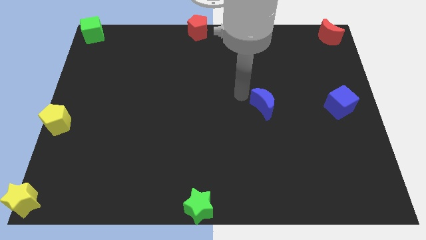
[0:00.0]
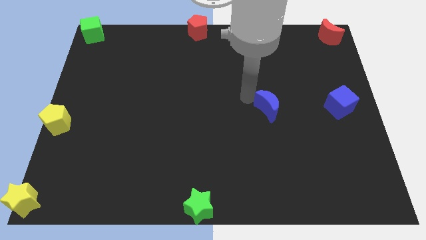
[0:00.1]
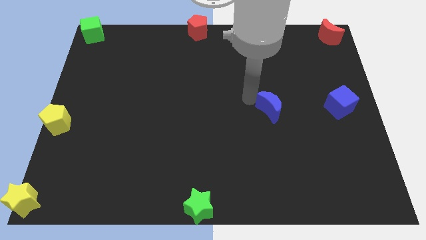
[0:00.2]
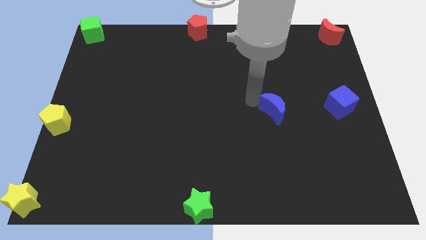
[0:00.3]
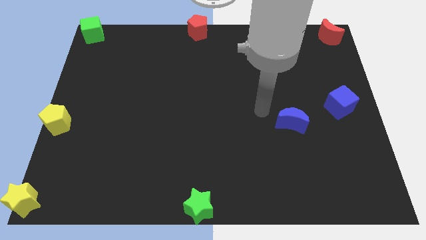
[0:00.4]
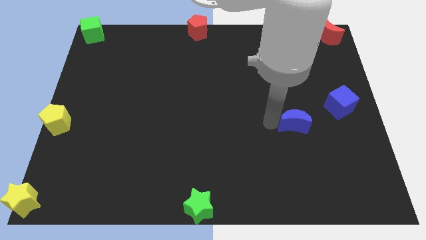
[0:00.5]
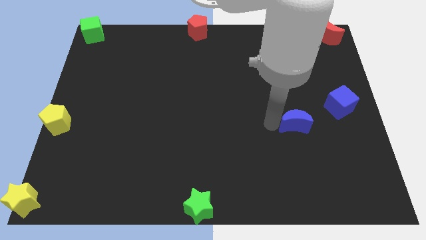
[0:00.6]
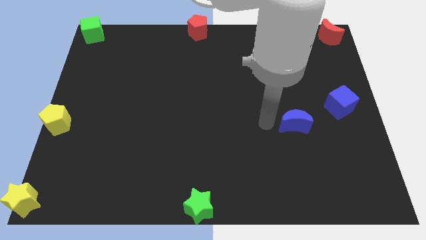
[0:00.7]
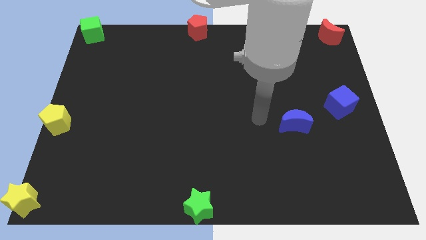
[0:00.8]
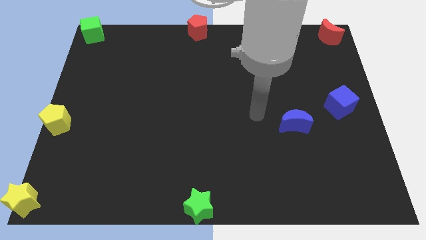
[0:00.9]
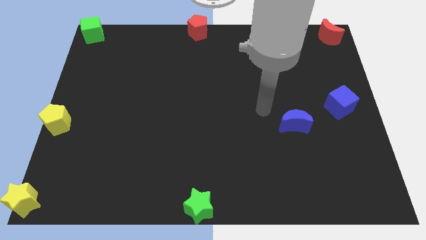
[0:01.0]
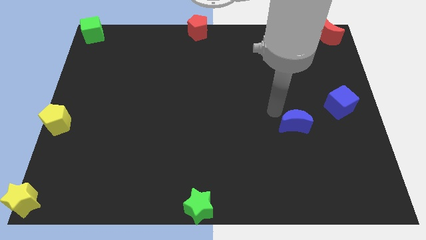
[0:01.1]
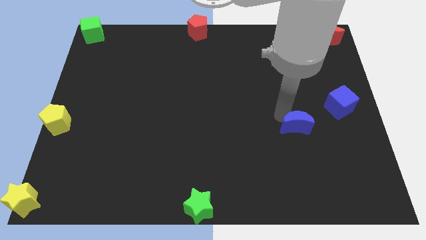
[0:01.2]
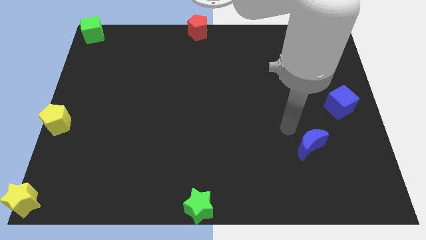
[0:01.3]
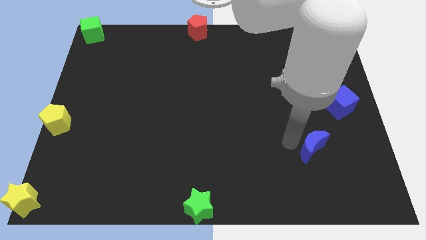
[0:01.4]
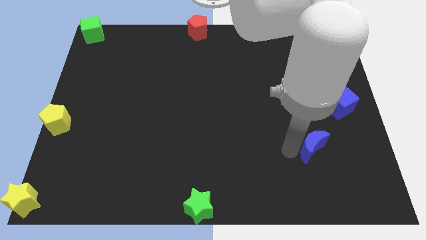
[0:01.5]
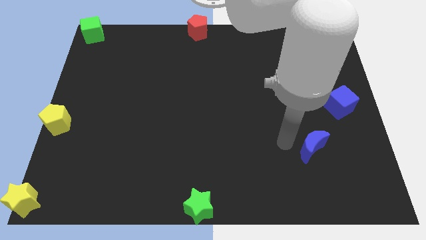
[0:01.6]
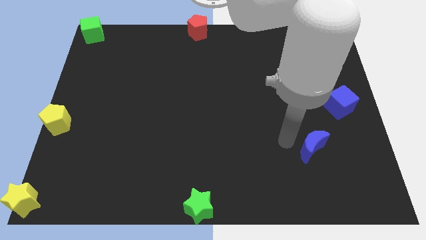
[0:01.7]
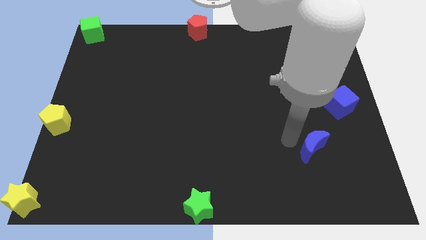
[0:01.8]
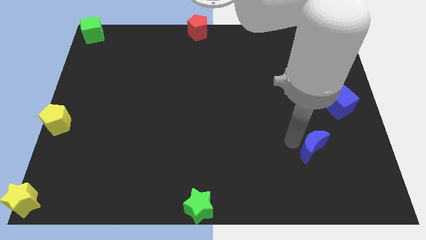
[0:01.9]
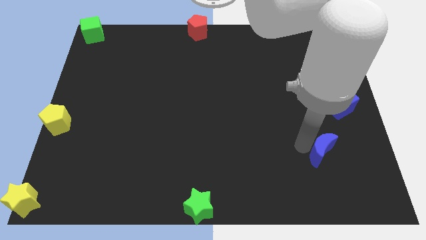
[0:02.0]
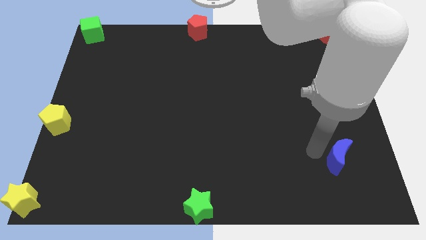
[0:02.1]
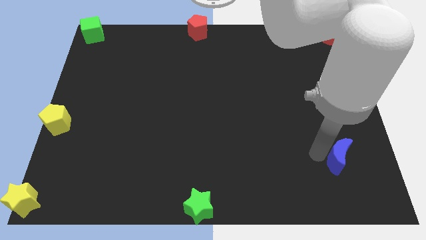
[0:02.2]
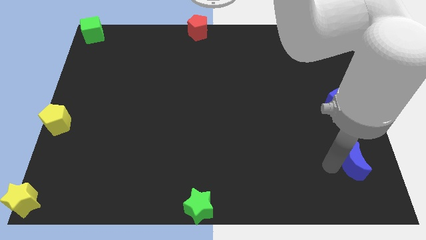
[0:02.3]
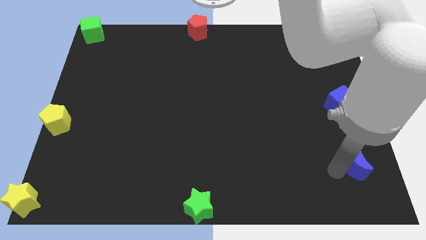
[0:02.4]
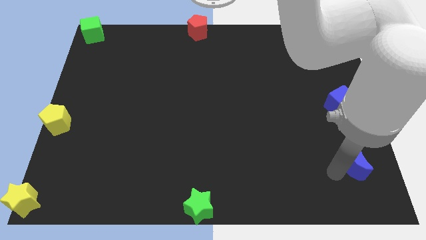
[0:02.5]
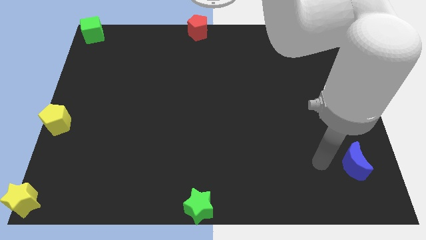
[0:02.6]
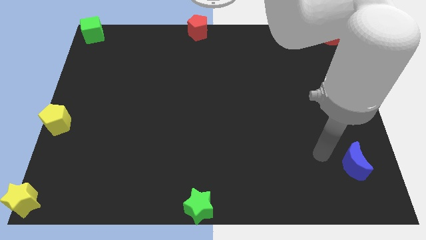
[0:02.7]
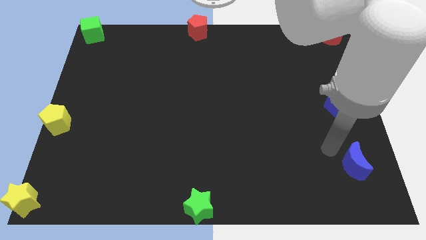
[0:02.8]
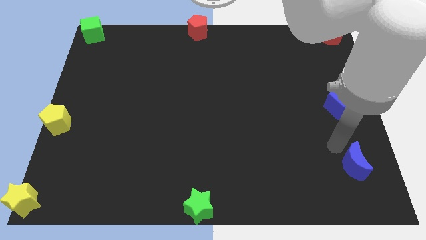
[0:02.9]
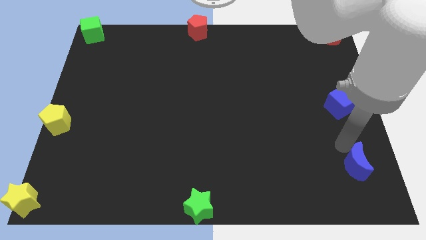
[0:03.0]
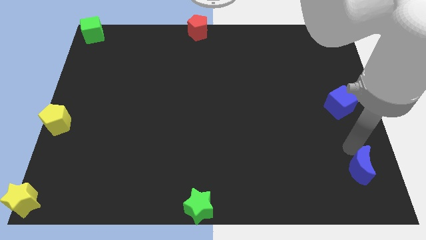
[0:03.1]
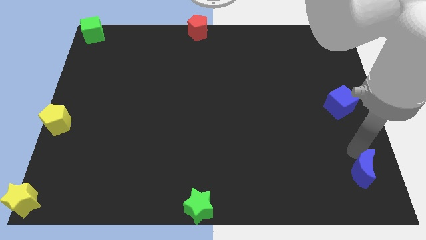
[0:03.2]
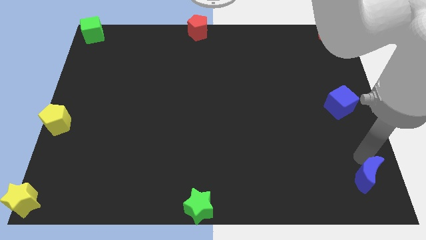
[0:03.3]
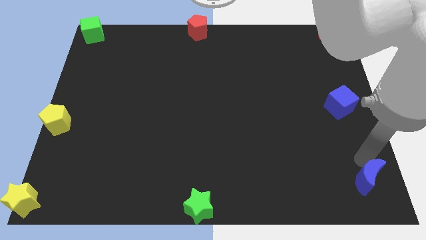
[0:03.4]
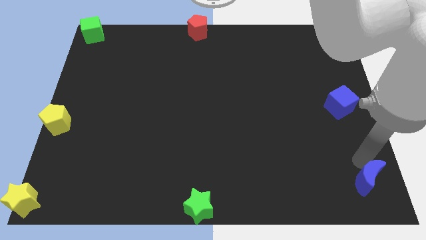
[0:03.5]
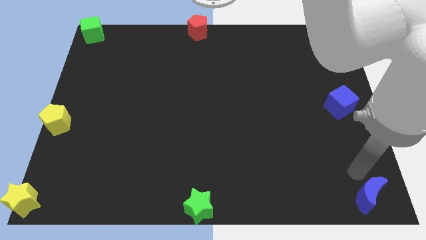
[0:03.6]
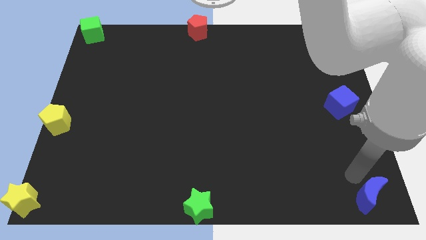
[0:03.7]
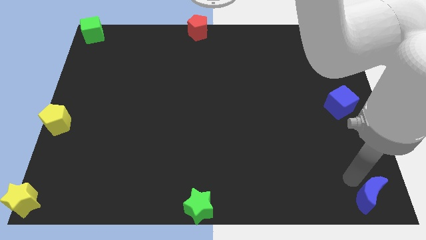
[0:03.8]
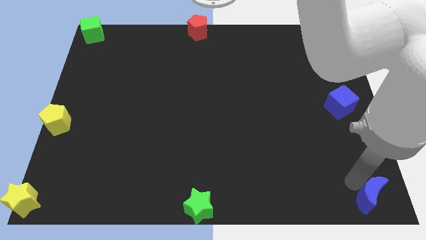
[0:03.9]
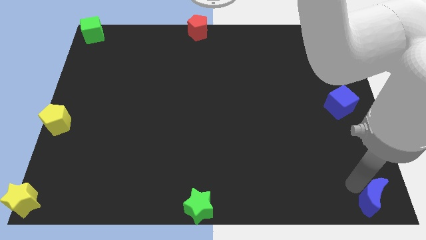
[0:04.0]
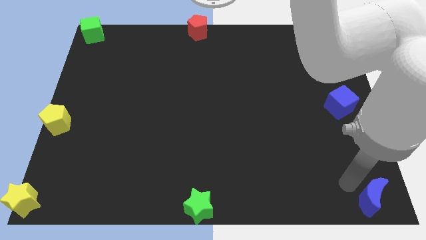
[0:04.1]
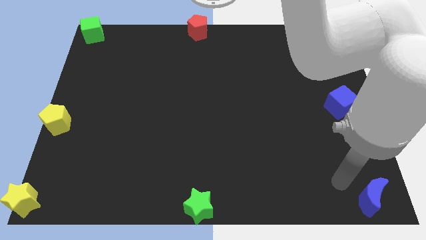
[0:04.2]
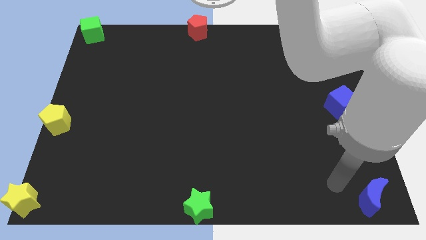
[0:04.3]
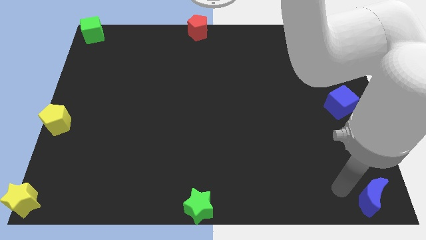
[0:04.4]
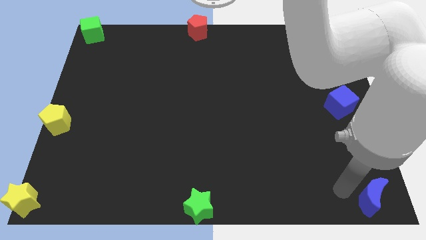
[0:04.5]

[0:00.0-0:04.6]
move the blue crescent to the bottom right of the board

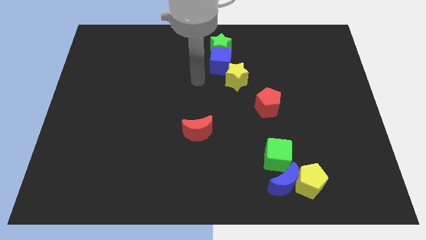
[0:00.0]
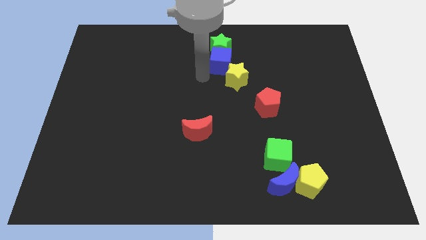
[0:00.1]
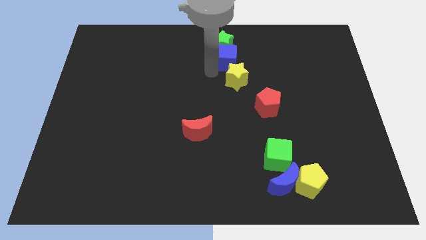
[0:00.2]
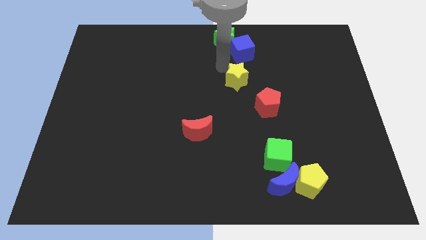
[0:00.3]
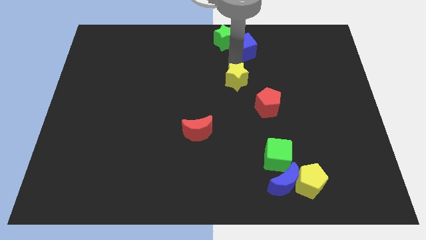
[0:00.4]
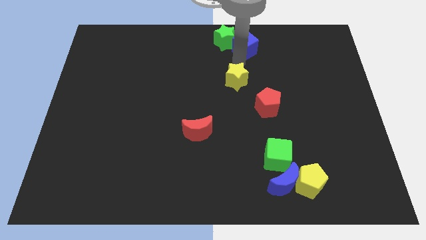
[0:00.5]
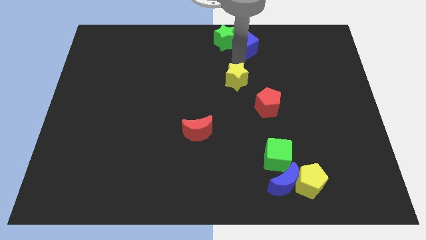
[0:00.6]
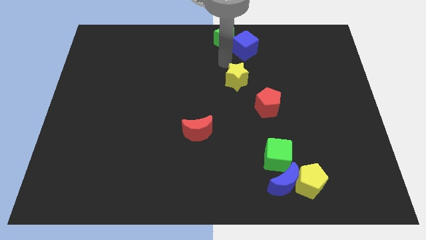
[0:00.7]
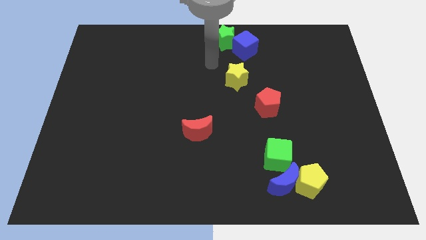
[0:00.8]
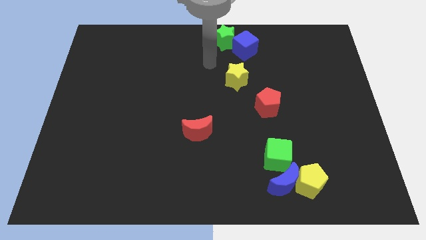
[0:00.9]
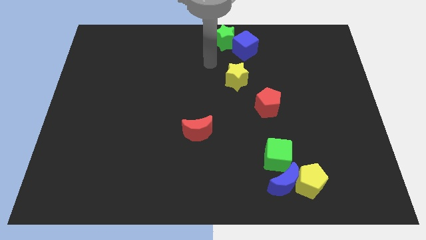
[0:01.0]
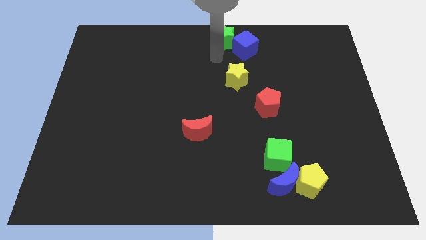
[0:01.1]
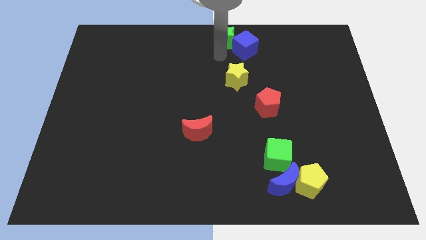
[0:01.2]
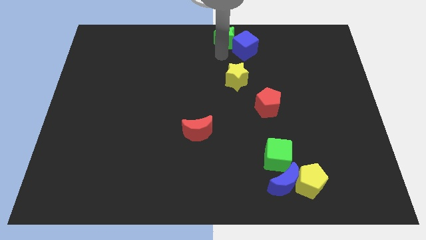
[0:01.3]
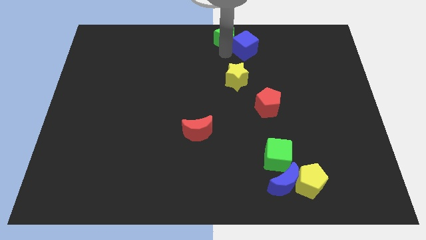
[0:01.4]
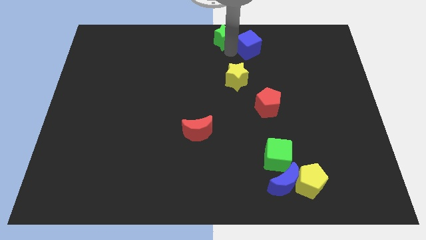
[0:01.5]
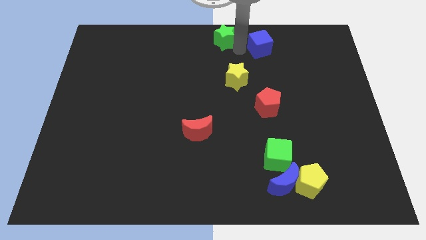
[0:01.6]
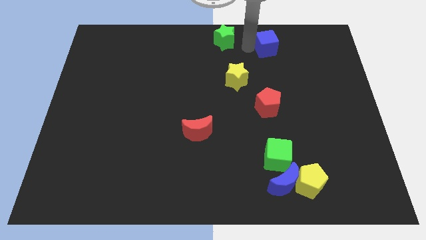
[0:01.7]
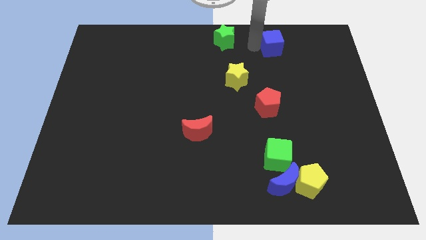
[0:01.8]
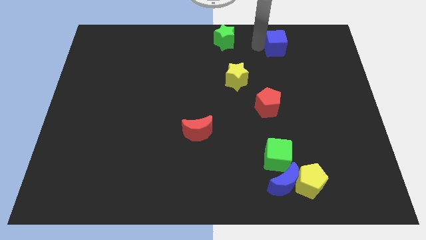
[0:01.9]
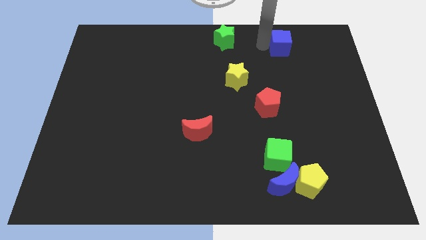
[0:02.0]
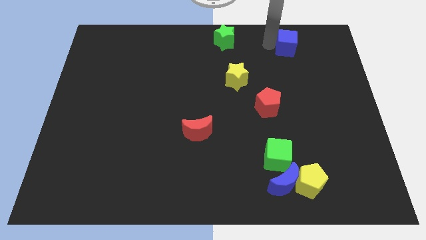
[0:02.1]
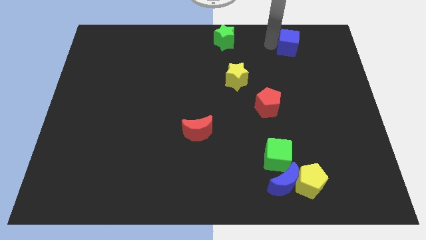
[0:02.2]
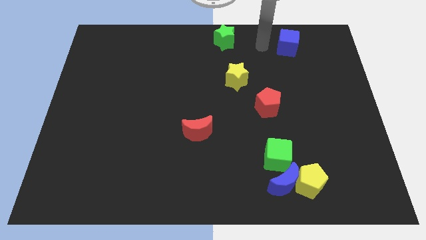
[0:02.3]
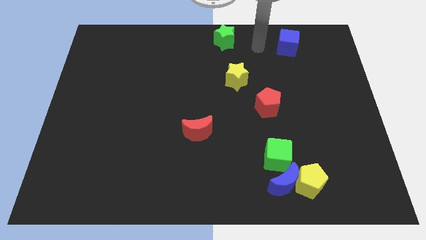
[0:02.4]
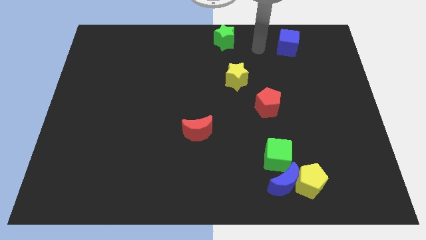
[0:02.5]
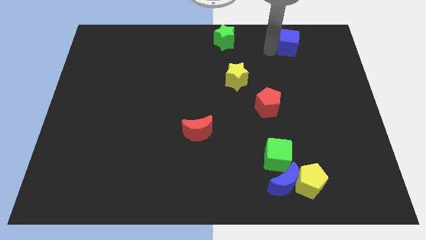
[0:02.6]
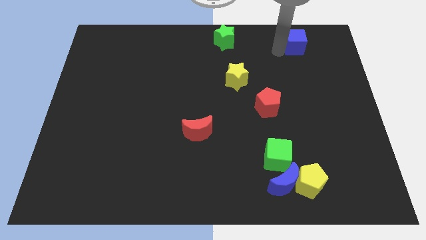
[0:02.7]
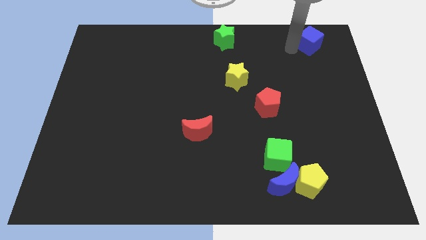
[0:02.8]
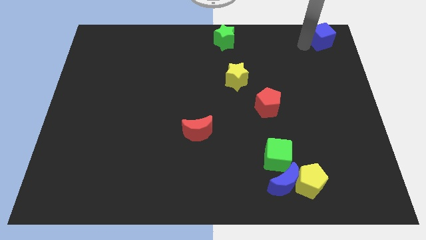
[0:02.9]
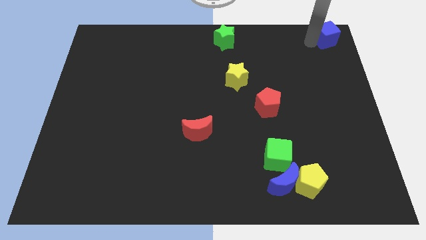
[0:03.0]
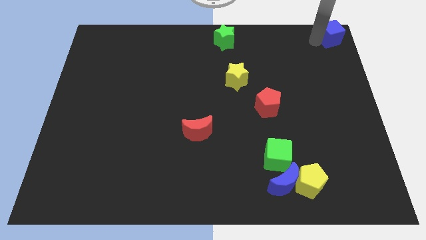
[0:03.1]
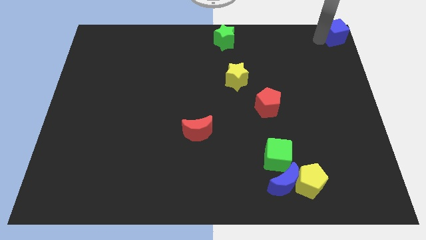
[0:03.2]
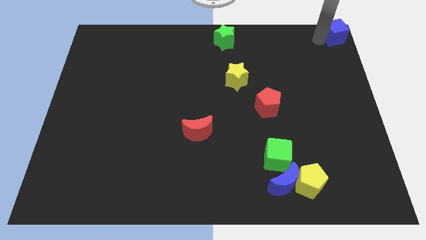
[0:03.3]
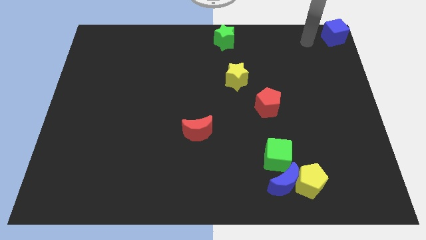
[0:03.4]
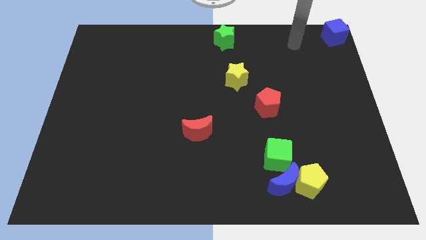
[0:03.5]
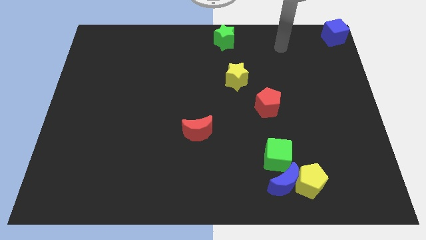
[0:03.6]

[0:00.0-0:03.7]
place the blue cube to the top right corner of the board

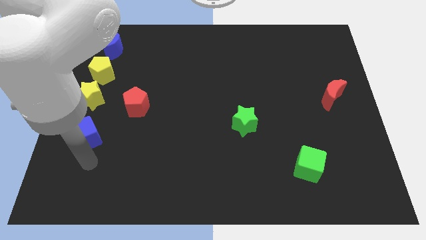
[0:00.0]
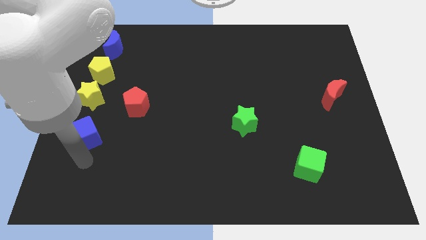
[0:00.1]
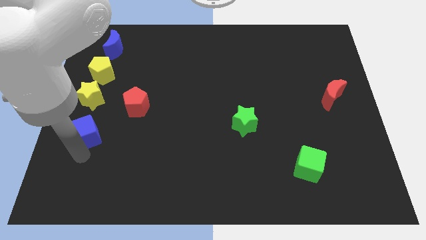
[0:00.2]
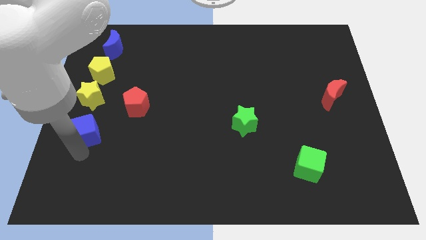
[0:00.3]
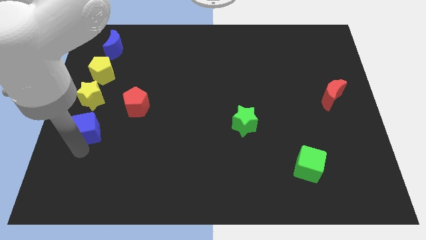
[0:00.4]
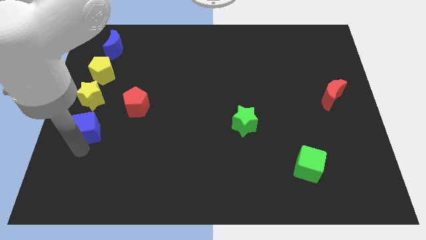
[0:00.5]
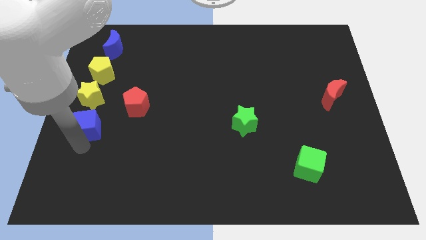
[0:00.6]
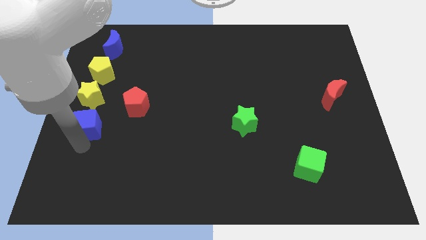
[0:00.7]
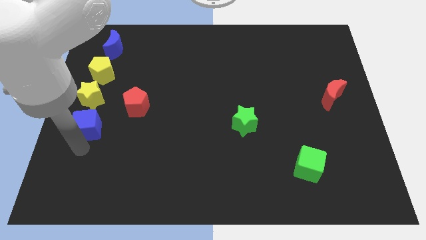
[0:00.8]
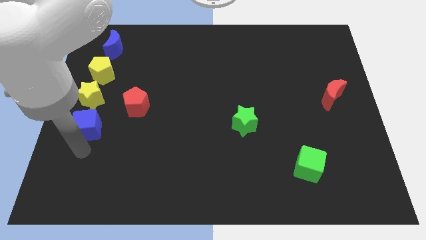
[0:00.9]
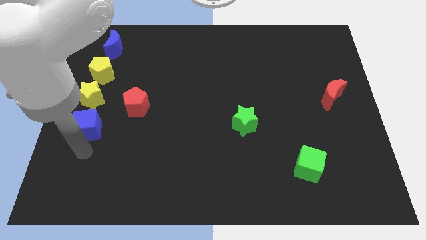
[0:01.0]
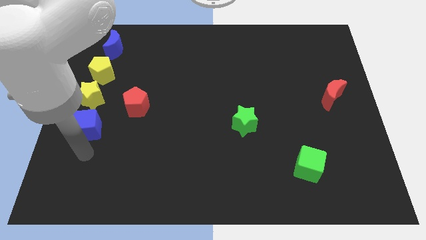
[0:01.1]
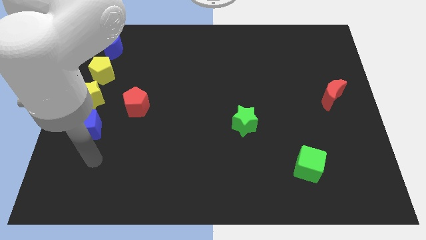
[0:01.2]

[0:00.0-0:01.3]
place the blue cube at the bottom of yellow star
